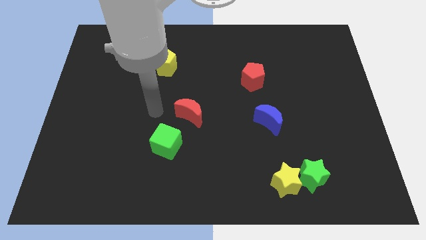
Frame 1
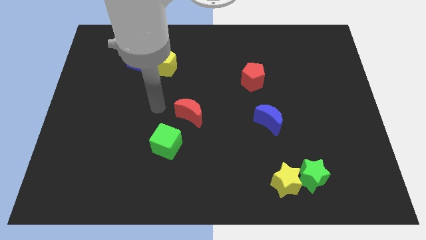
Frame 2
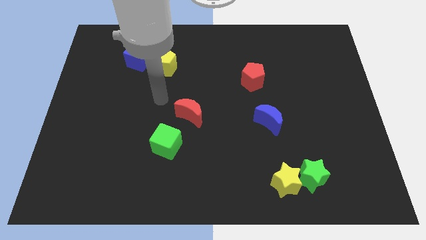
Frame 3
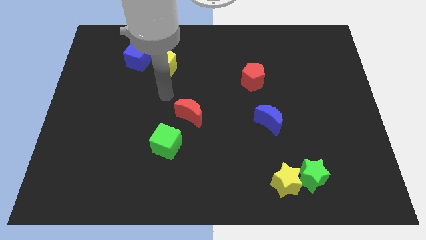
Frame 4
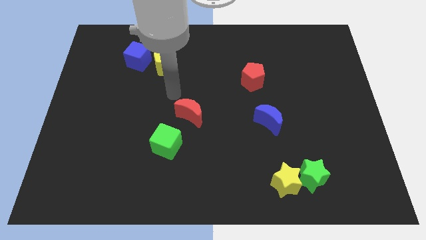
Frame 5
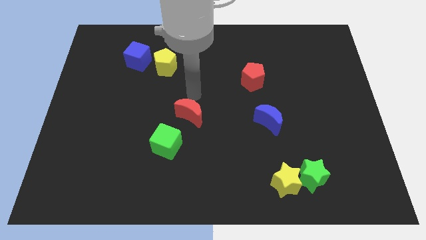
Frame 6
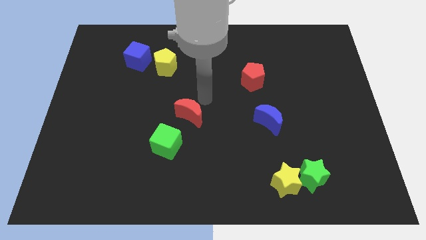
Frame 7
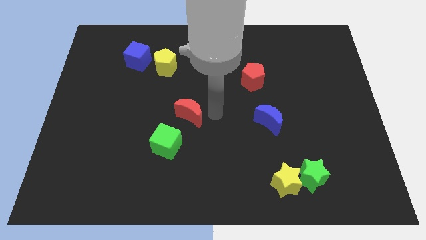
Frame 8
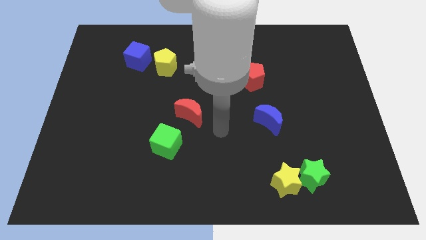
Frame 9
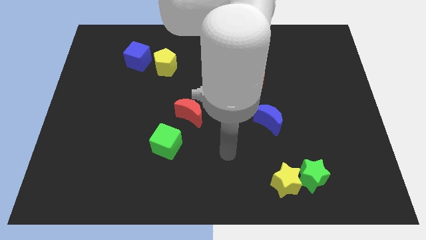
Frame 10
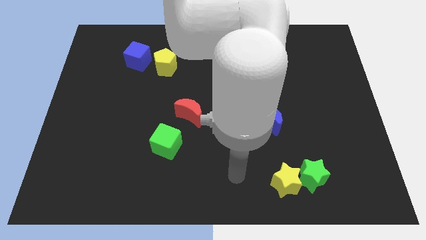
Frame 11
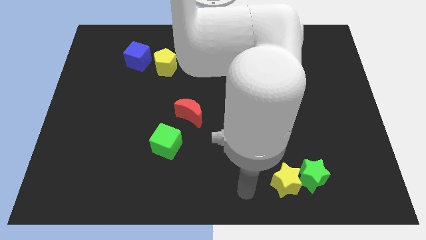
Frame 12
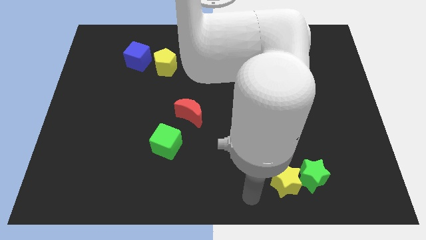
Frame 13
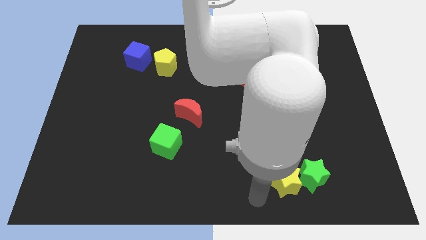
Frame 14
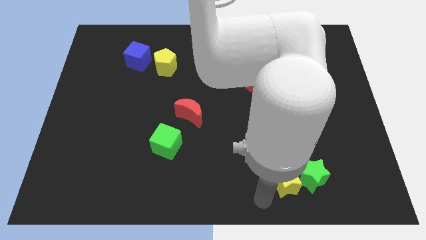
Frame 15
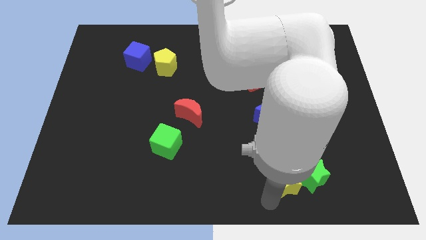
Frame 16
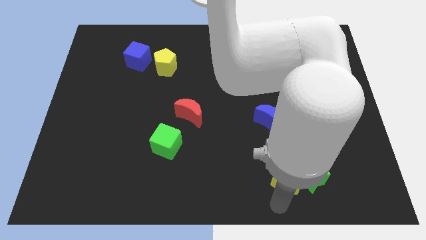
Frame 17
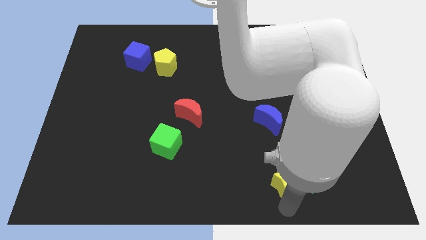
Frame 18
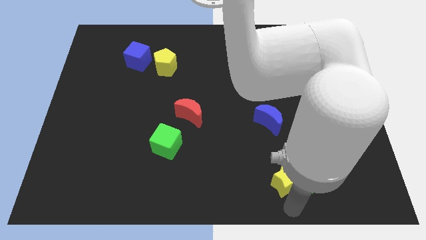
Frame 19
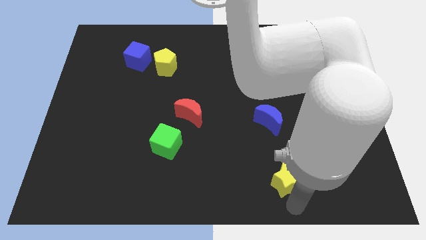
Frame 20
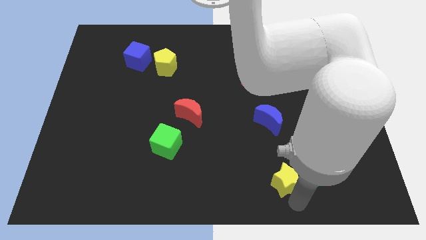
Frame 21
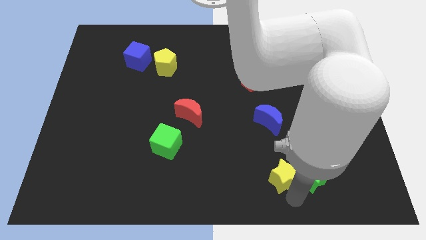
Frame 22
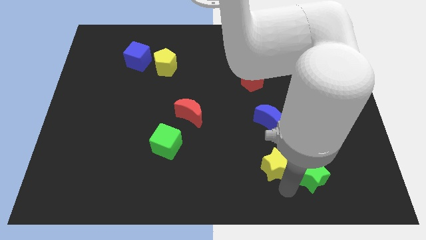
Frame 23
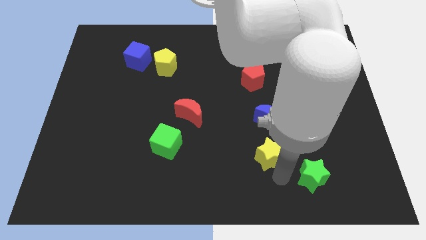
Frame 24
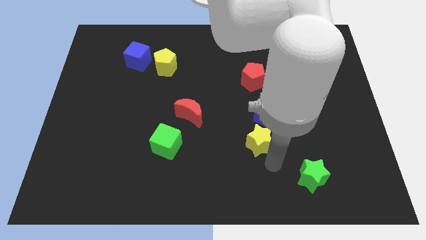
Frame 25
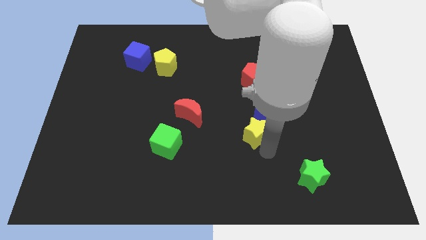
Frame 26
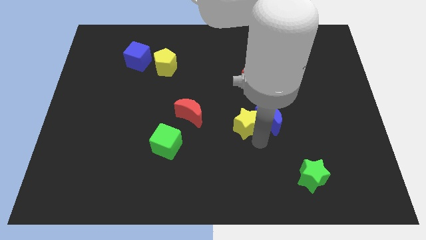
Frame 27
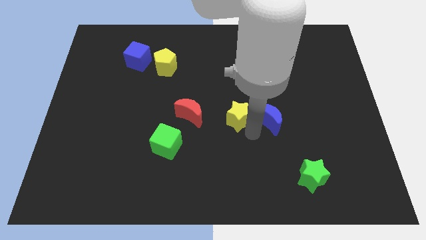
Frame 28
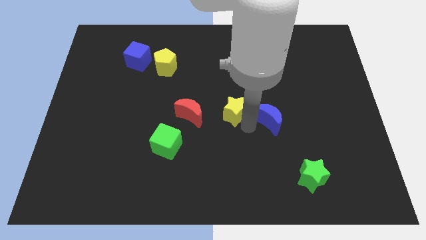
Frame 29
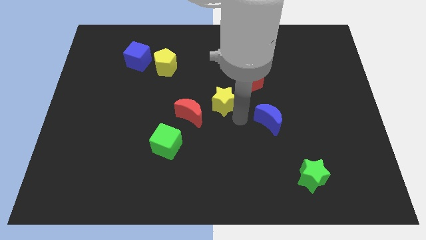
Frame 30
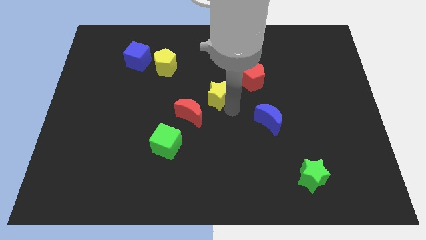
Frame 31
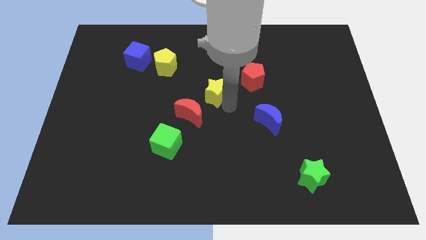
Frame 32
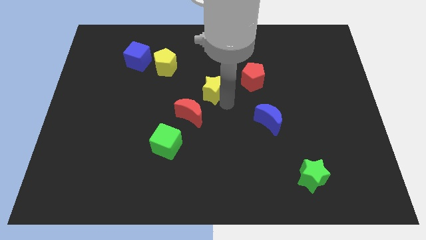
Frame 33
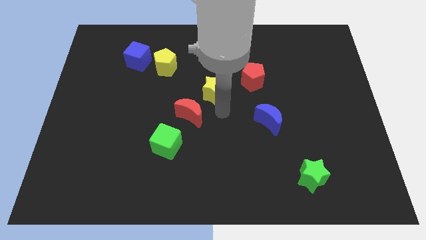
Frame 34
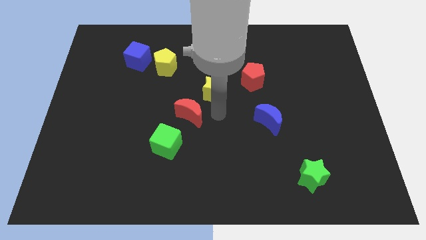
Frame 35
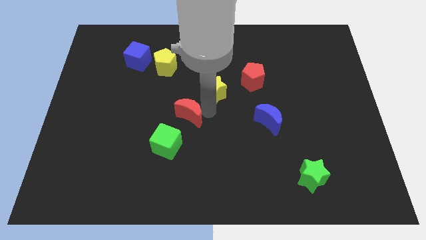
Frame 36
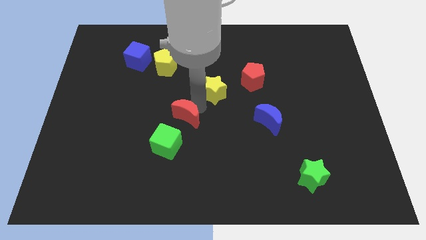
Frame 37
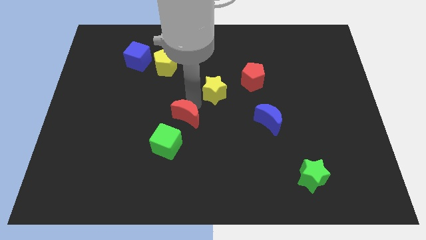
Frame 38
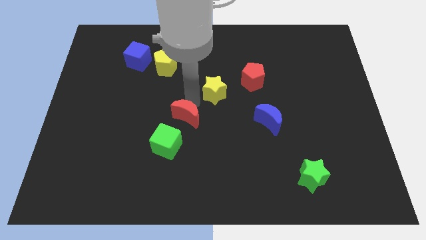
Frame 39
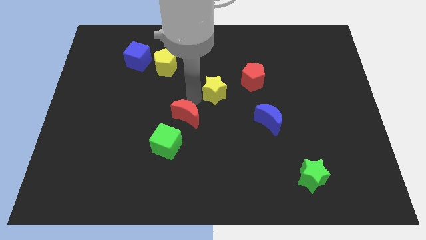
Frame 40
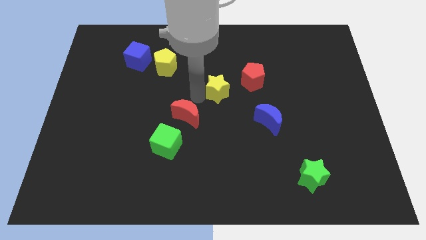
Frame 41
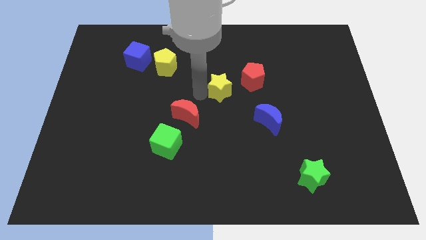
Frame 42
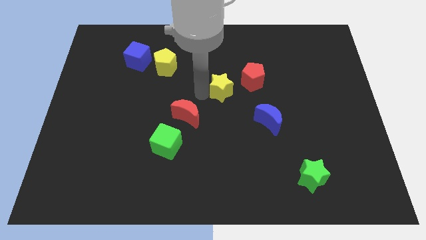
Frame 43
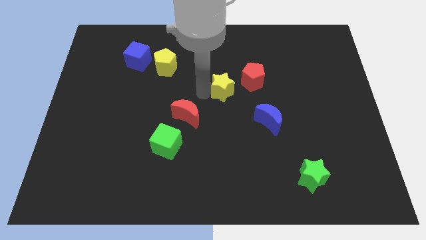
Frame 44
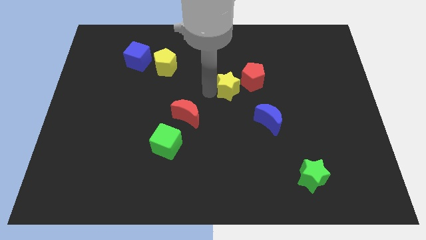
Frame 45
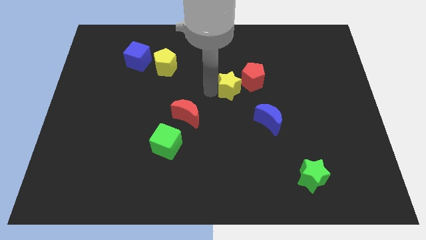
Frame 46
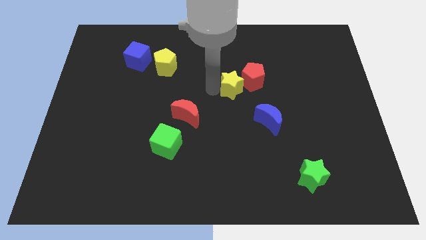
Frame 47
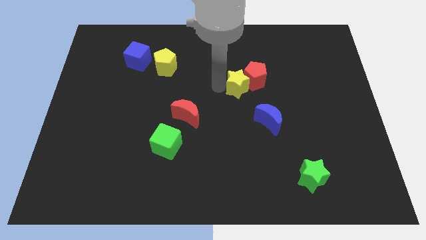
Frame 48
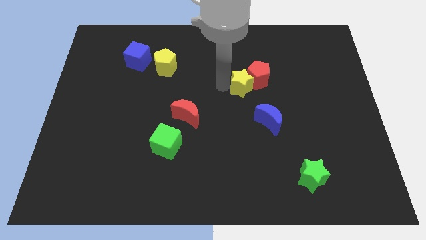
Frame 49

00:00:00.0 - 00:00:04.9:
push the yellow star towards the red pentagon

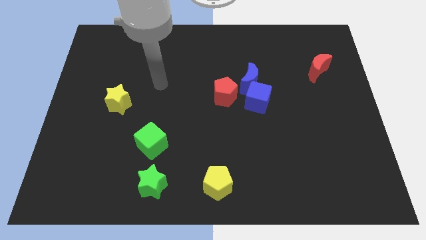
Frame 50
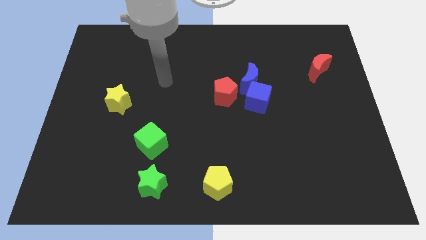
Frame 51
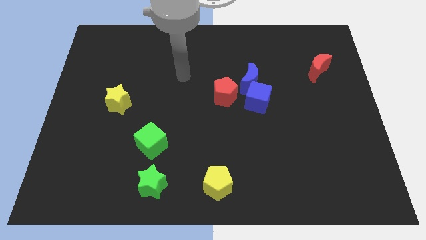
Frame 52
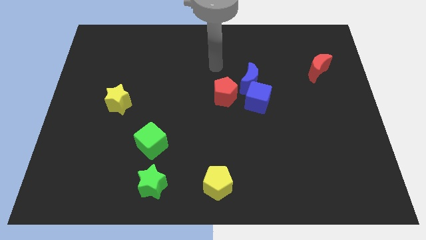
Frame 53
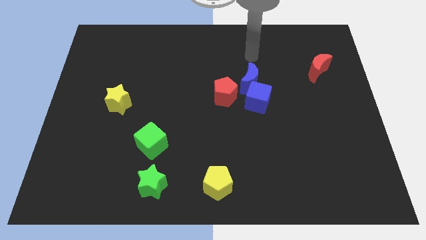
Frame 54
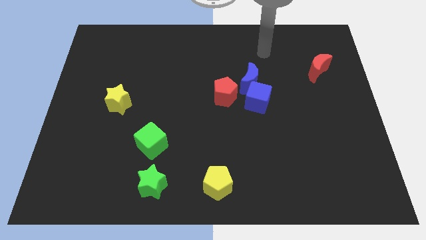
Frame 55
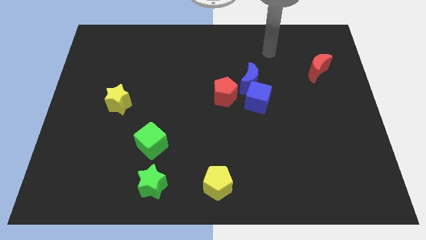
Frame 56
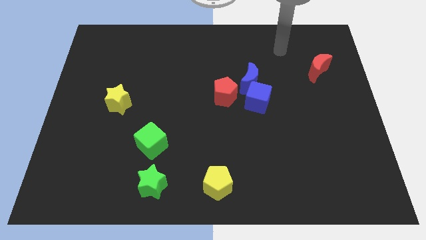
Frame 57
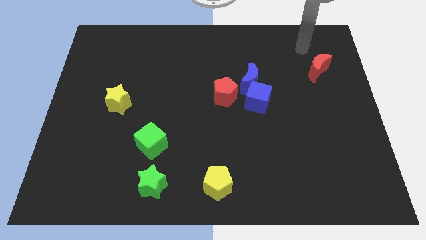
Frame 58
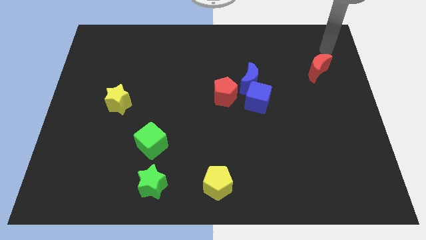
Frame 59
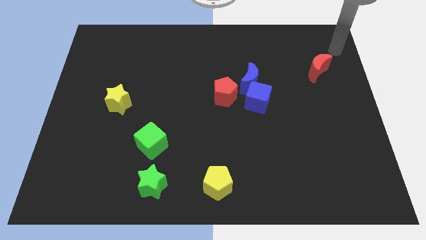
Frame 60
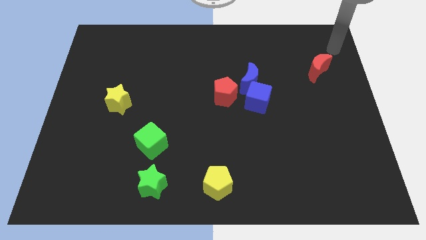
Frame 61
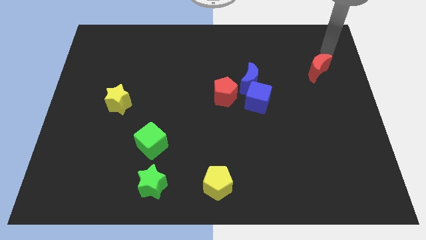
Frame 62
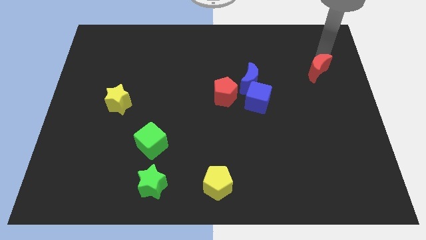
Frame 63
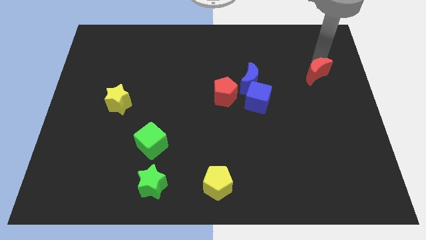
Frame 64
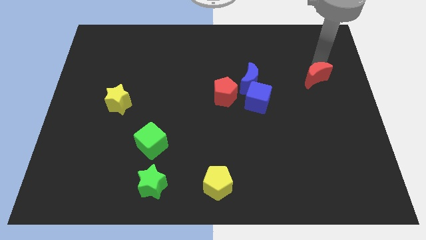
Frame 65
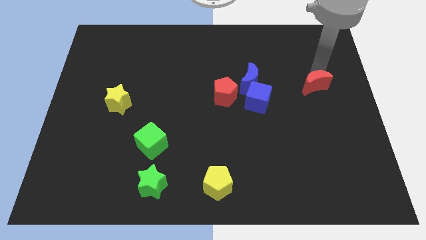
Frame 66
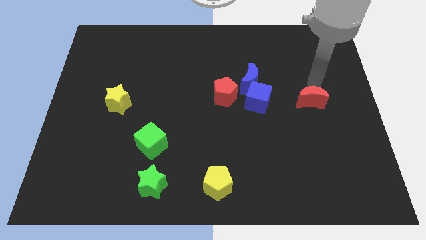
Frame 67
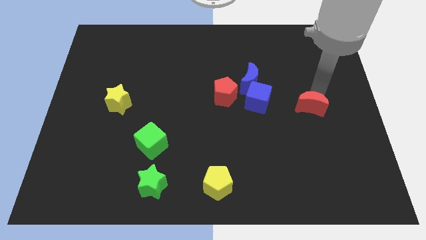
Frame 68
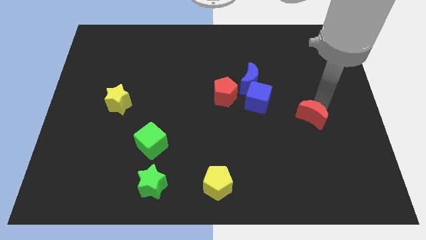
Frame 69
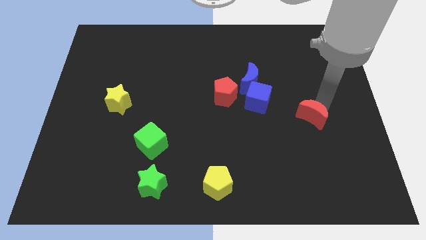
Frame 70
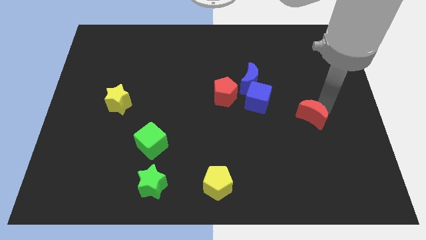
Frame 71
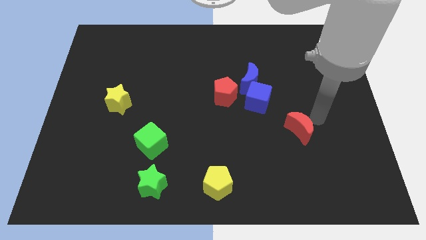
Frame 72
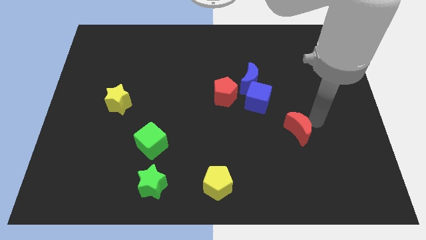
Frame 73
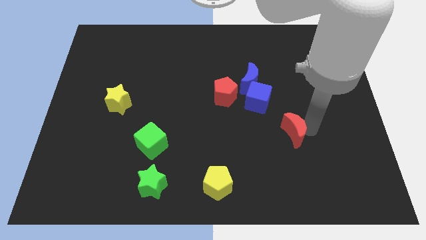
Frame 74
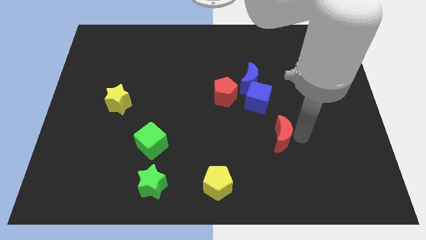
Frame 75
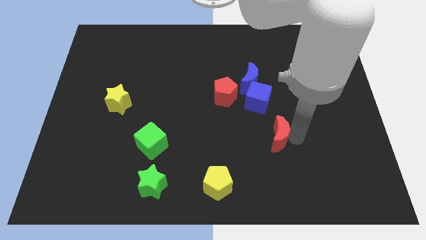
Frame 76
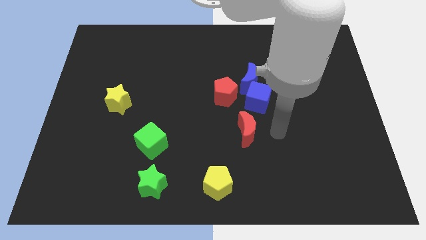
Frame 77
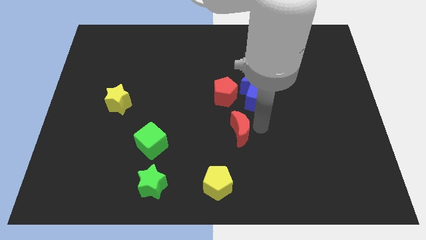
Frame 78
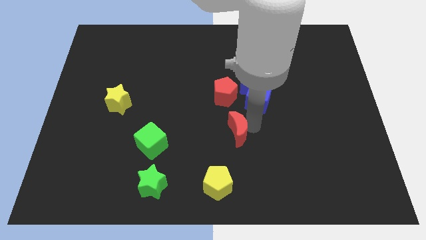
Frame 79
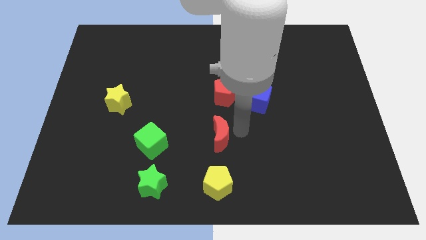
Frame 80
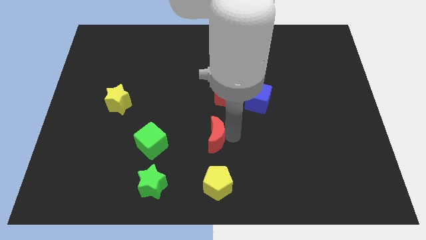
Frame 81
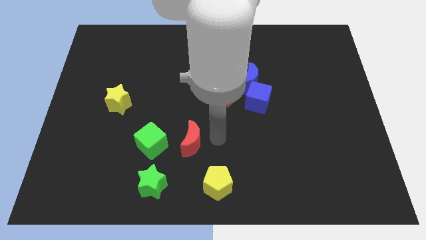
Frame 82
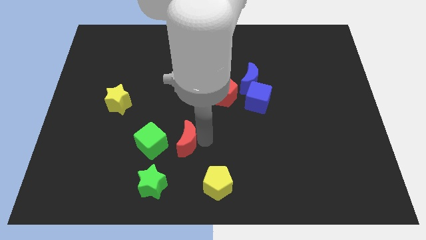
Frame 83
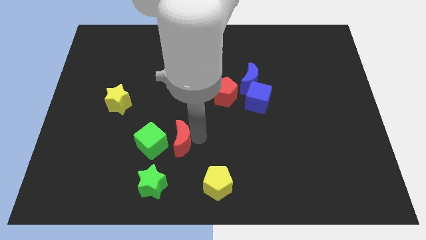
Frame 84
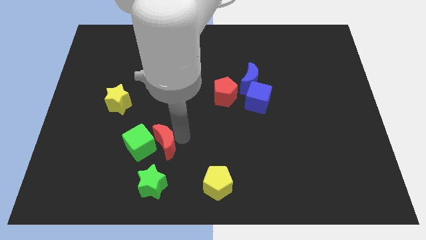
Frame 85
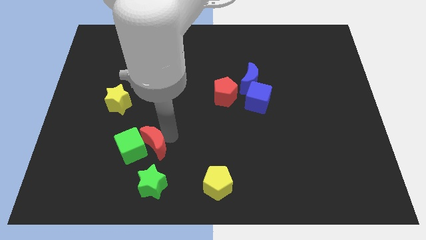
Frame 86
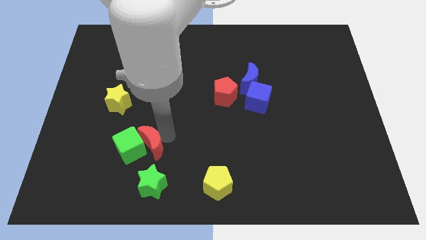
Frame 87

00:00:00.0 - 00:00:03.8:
move the red moon to the green cube

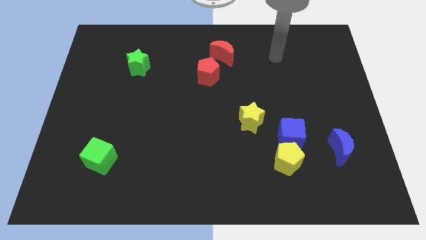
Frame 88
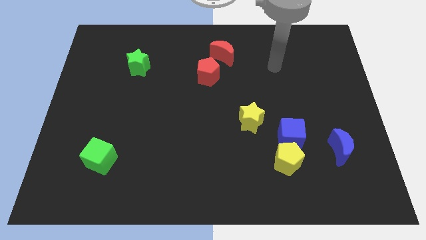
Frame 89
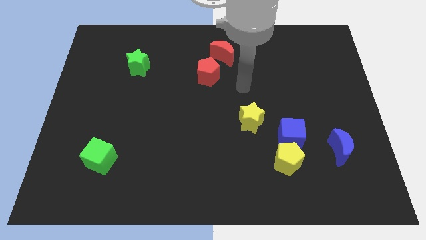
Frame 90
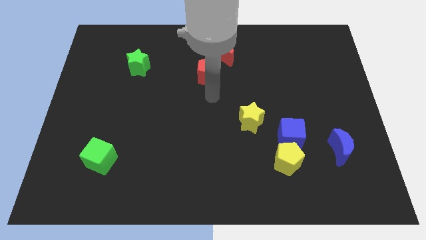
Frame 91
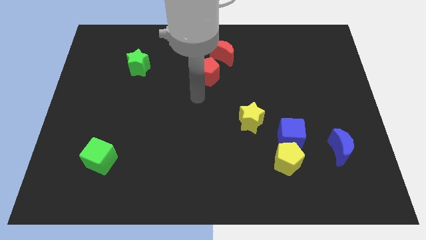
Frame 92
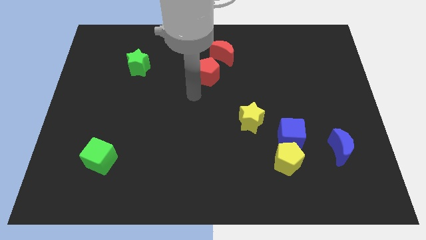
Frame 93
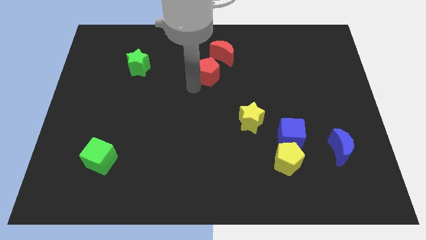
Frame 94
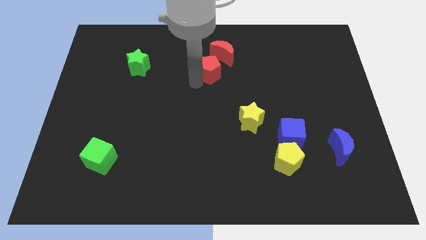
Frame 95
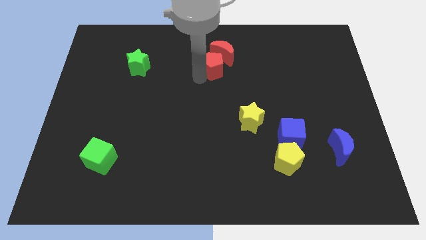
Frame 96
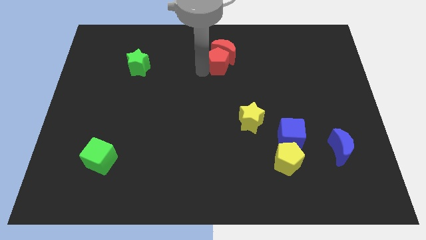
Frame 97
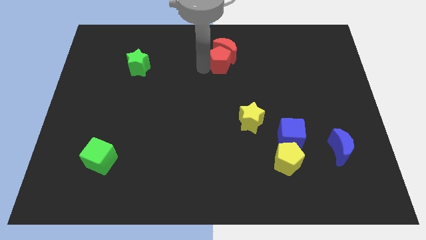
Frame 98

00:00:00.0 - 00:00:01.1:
move the red pentagon to the red moon
